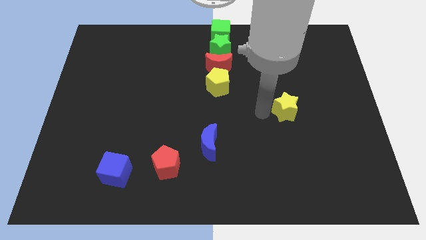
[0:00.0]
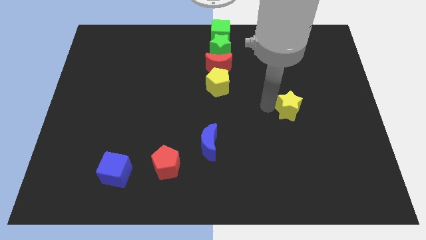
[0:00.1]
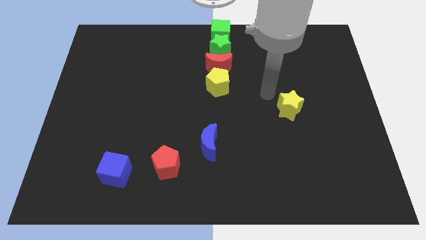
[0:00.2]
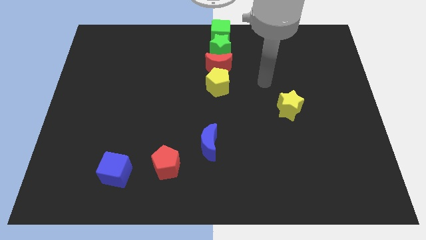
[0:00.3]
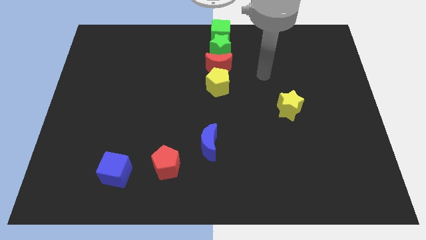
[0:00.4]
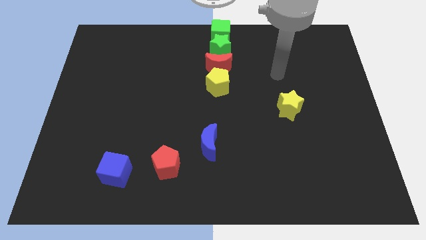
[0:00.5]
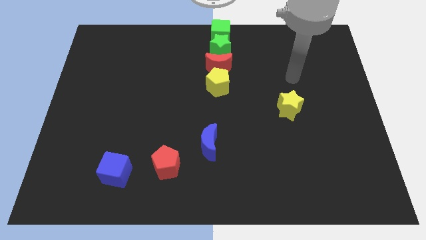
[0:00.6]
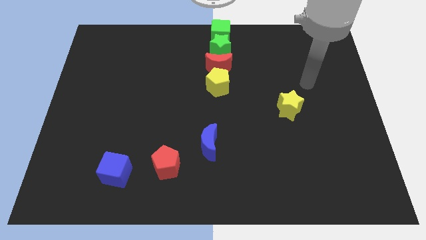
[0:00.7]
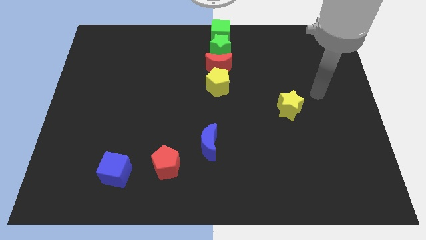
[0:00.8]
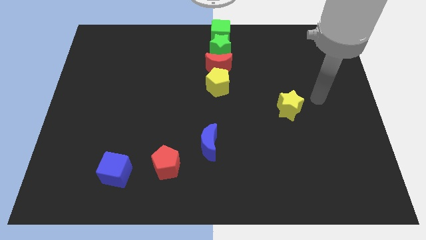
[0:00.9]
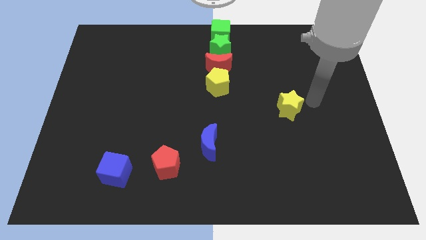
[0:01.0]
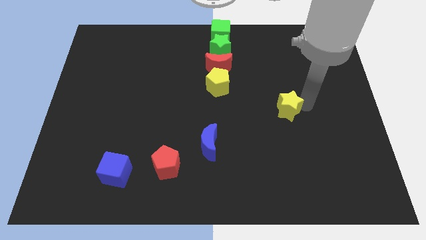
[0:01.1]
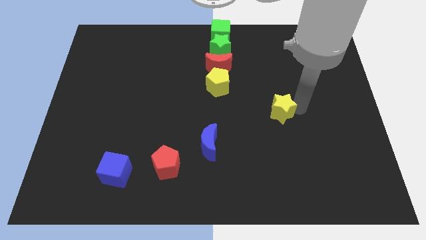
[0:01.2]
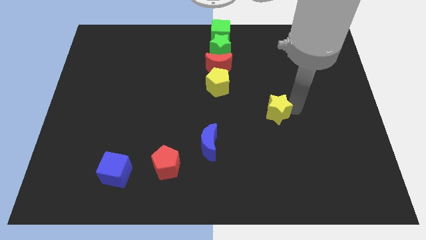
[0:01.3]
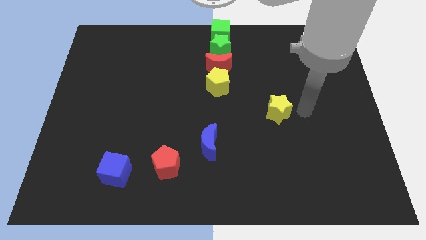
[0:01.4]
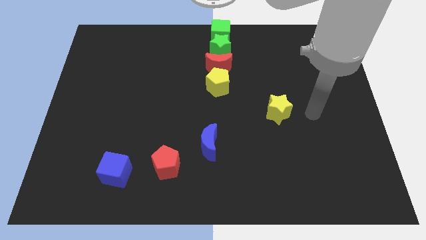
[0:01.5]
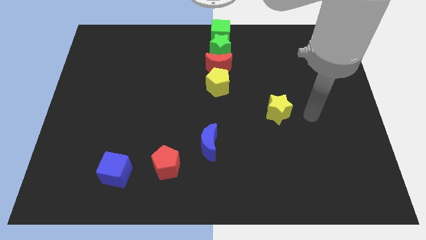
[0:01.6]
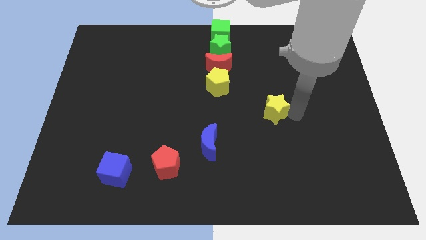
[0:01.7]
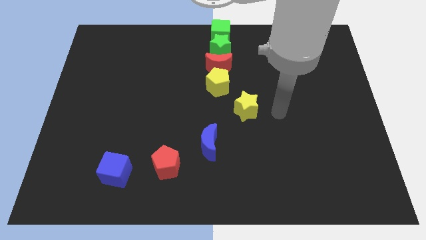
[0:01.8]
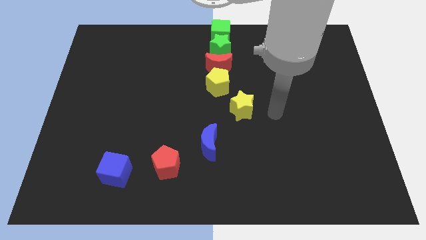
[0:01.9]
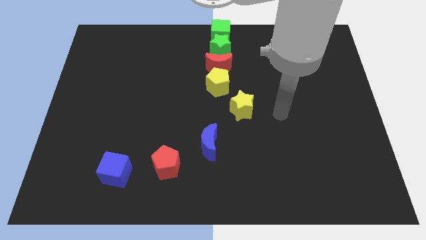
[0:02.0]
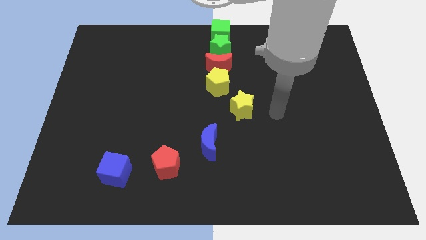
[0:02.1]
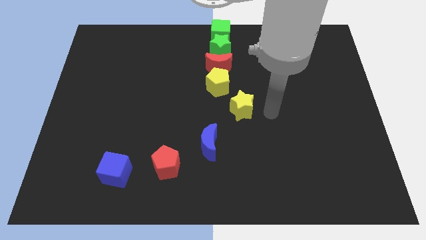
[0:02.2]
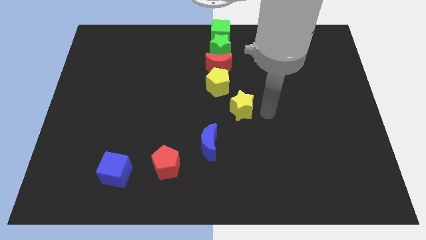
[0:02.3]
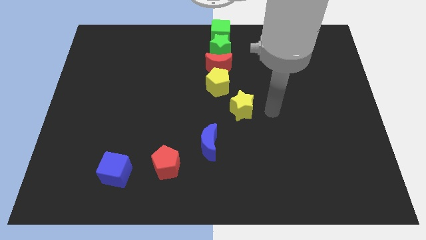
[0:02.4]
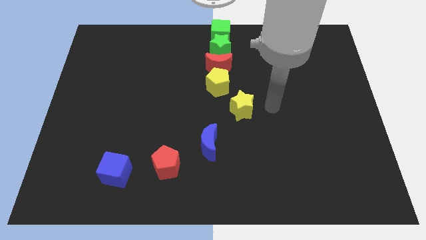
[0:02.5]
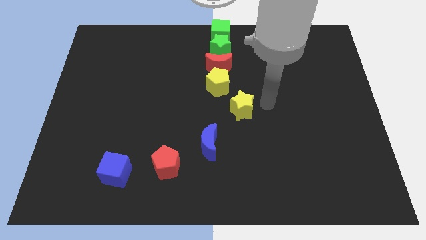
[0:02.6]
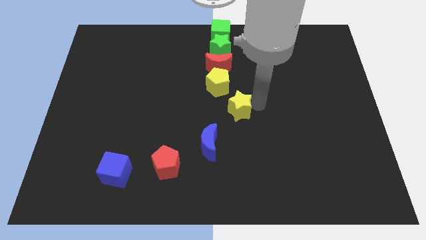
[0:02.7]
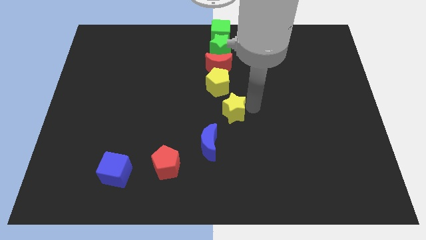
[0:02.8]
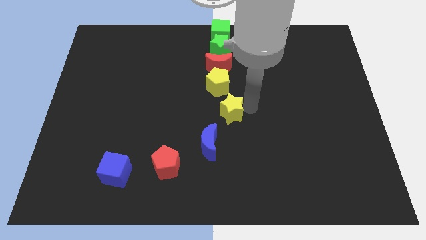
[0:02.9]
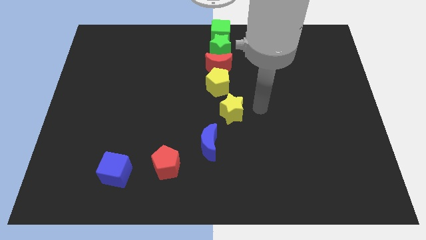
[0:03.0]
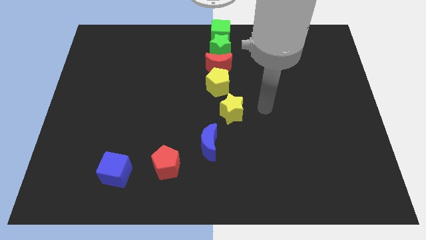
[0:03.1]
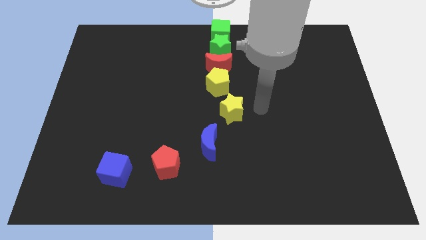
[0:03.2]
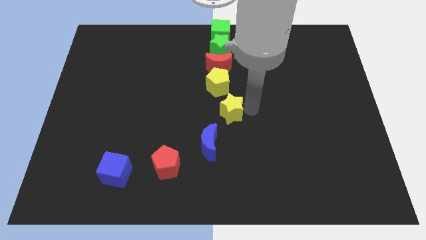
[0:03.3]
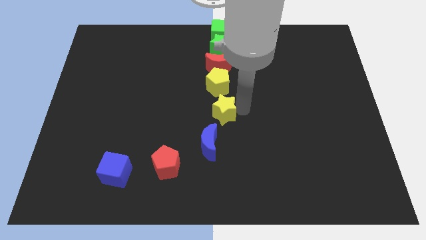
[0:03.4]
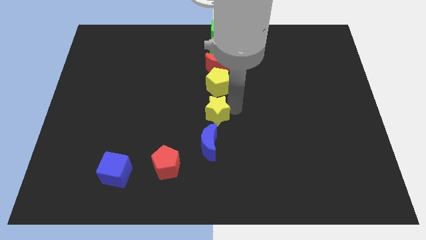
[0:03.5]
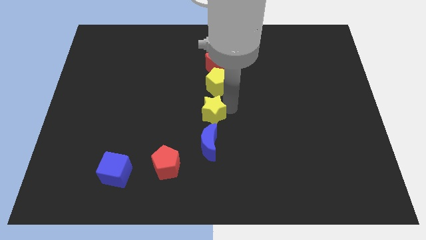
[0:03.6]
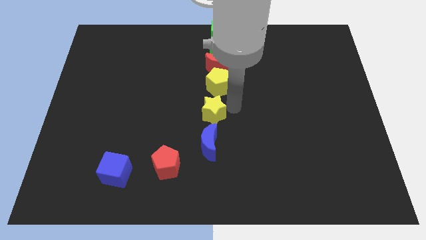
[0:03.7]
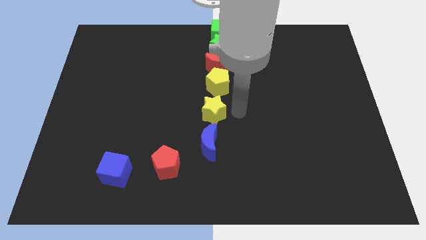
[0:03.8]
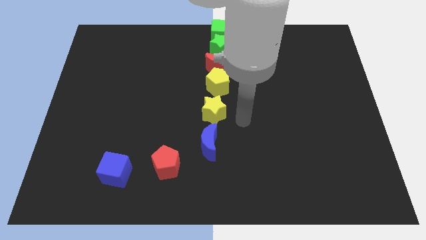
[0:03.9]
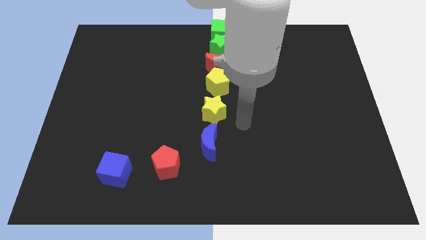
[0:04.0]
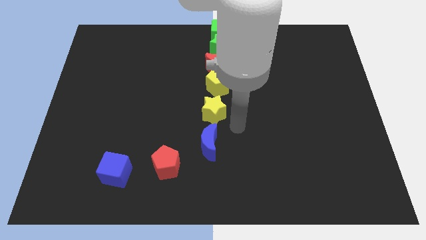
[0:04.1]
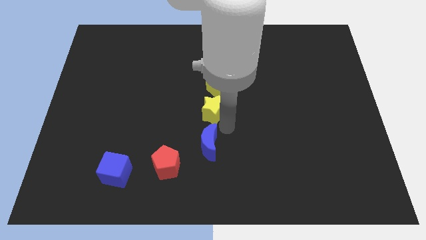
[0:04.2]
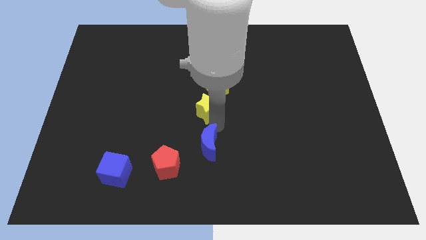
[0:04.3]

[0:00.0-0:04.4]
place the yellow star in between the blue moon and the yellow pentagon

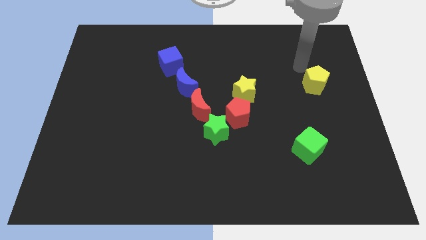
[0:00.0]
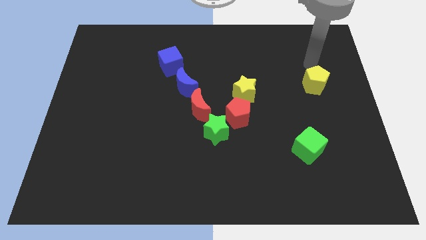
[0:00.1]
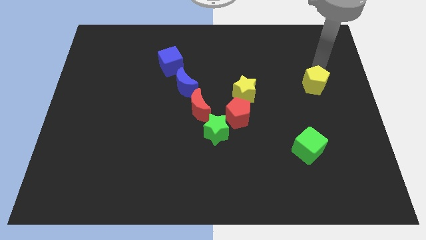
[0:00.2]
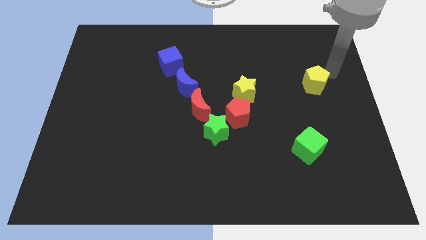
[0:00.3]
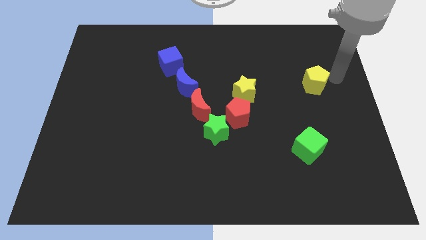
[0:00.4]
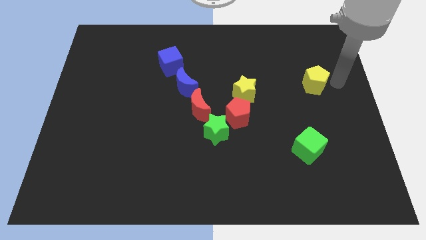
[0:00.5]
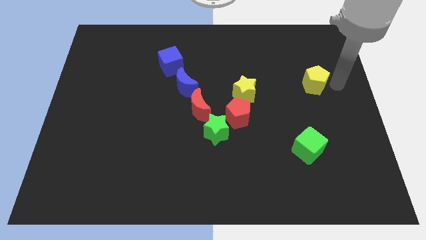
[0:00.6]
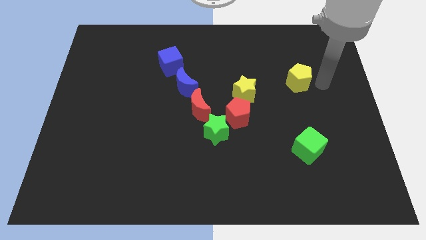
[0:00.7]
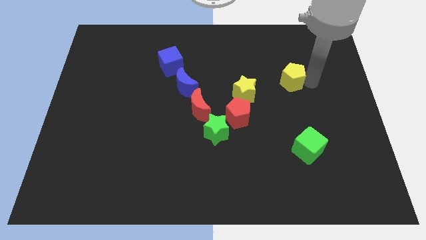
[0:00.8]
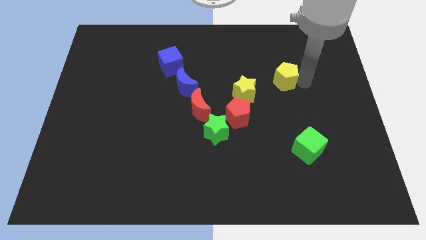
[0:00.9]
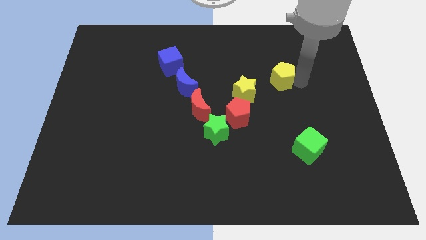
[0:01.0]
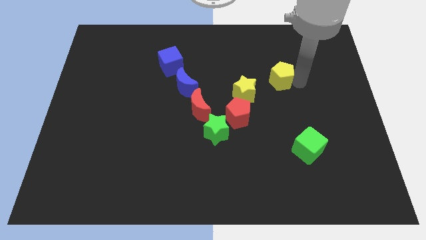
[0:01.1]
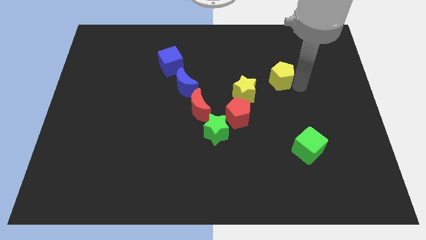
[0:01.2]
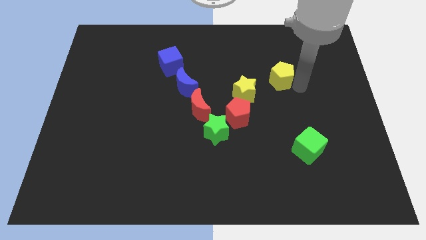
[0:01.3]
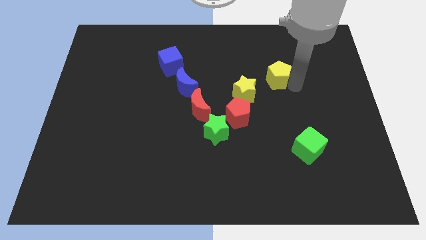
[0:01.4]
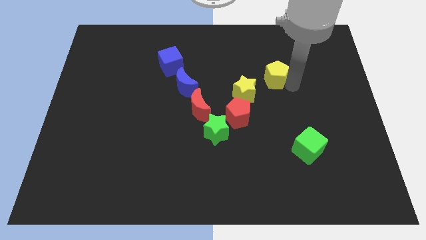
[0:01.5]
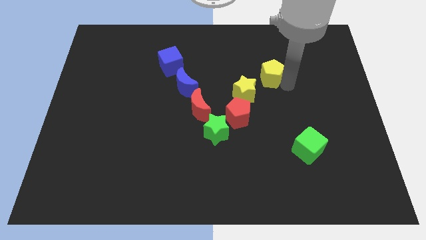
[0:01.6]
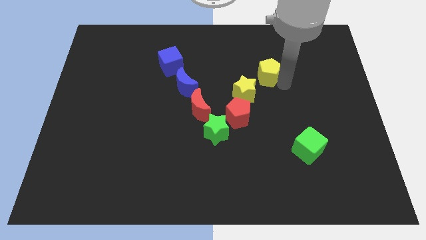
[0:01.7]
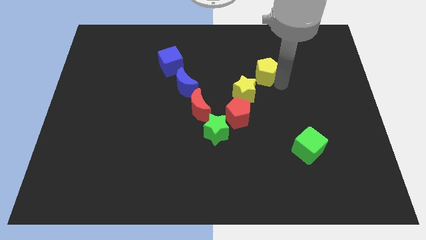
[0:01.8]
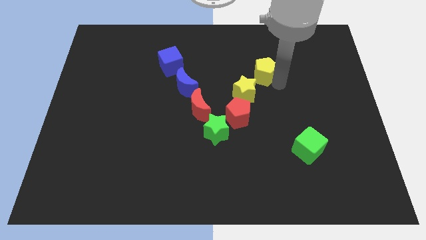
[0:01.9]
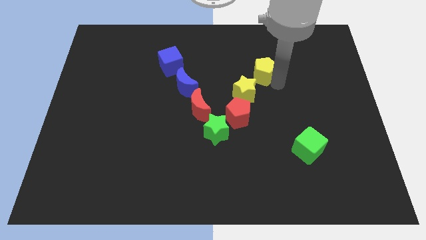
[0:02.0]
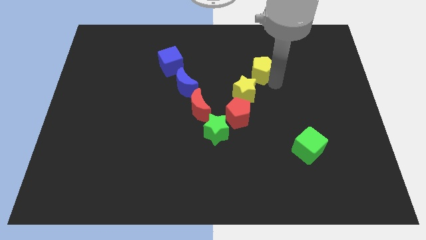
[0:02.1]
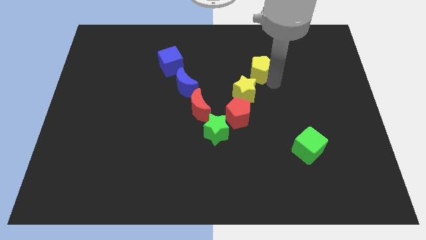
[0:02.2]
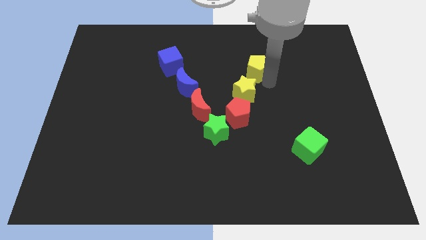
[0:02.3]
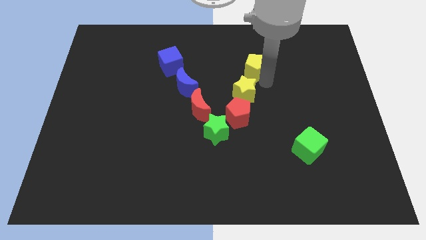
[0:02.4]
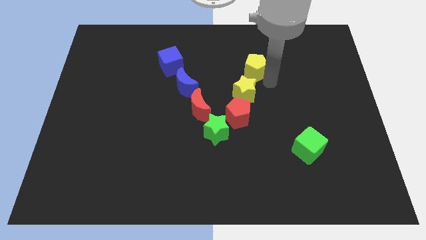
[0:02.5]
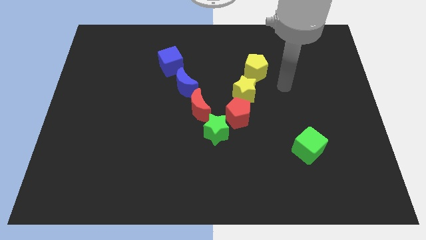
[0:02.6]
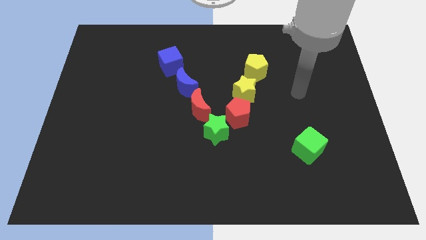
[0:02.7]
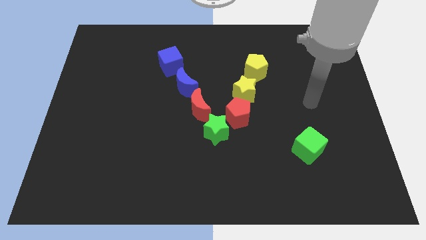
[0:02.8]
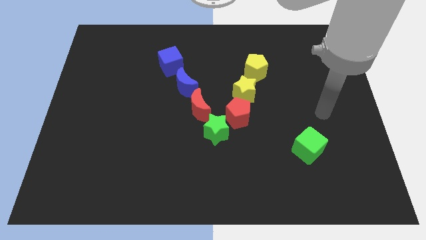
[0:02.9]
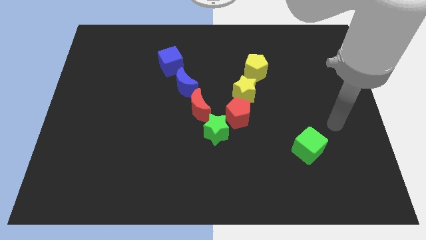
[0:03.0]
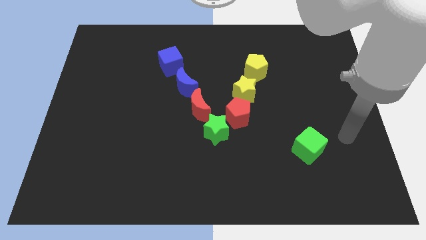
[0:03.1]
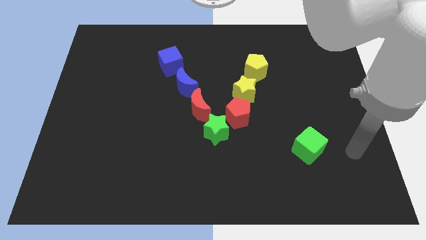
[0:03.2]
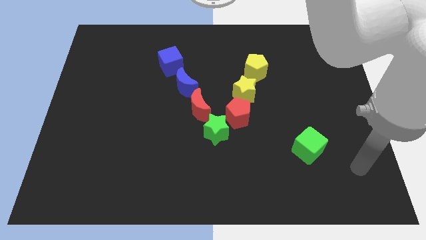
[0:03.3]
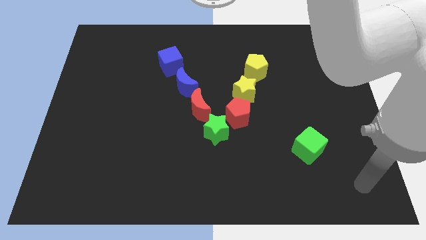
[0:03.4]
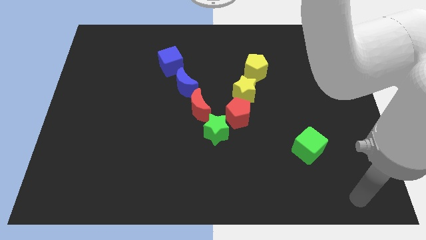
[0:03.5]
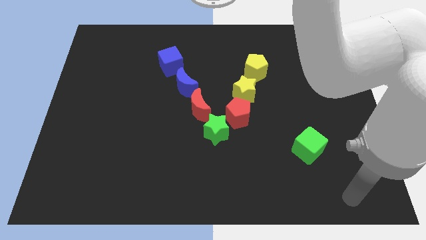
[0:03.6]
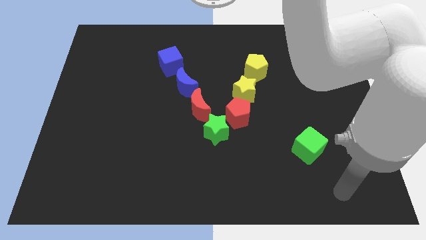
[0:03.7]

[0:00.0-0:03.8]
move the yellow pentagon to the top of the yellow star

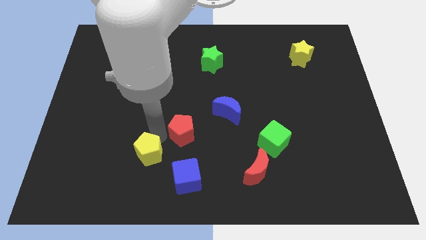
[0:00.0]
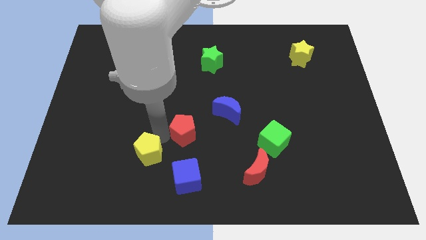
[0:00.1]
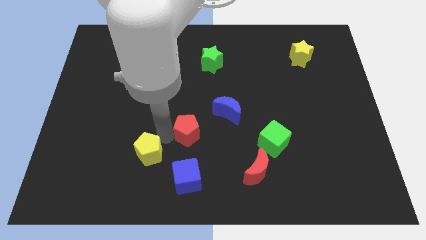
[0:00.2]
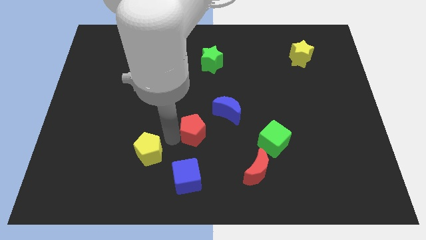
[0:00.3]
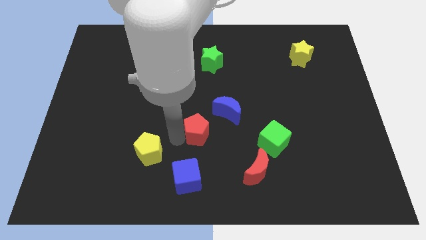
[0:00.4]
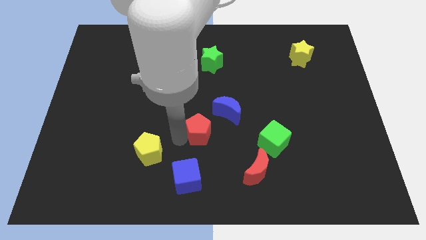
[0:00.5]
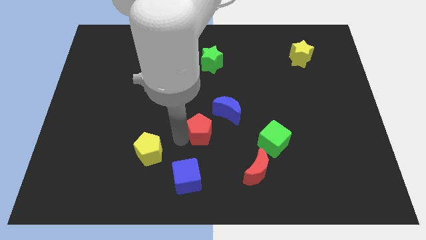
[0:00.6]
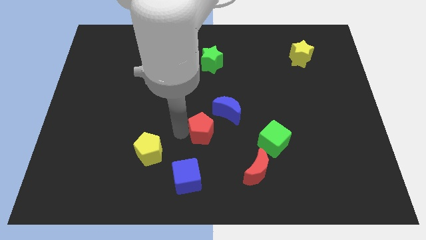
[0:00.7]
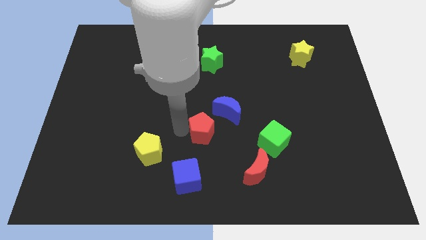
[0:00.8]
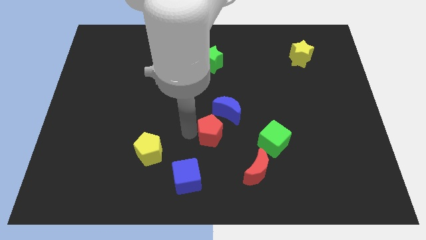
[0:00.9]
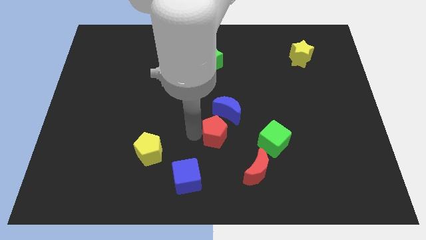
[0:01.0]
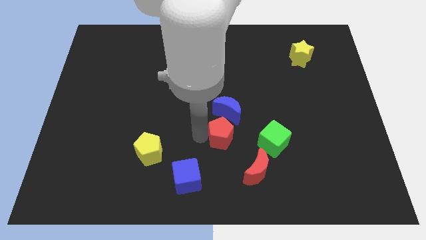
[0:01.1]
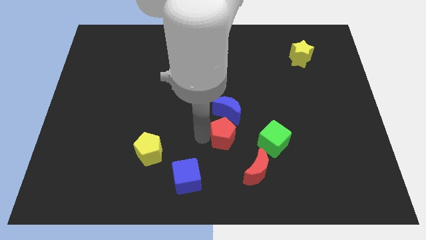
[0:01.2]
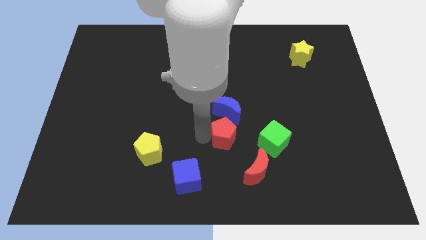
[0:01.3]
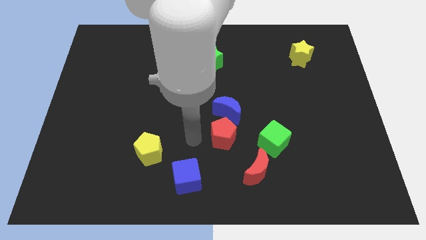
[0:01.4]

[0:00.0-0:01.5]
move the red pentagon below the blue crescent
